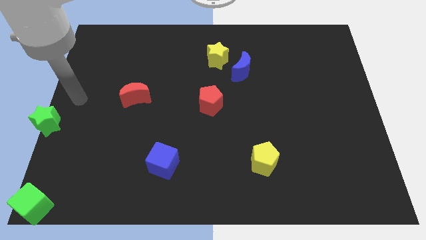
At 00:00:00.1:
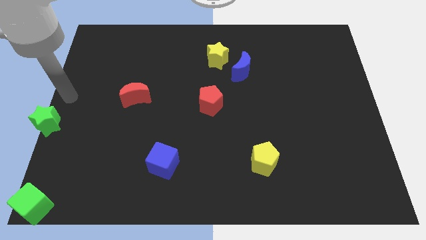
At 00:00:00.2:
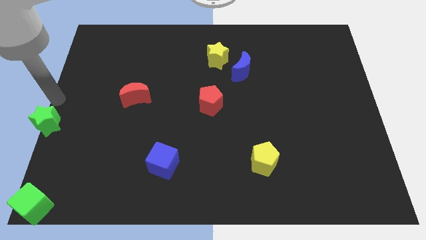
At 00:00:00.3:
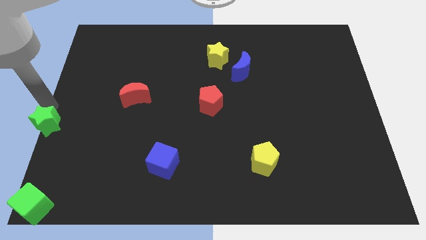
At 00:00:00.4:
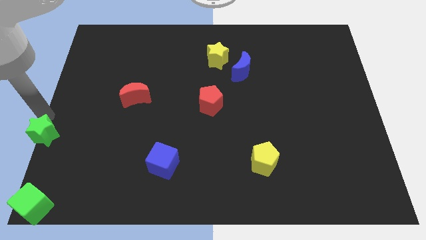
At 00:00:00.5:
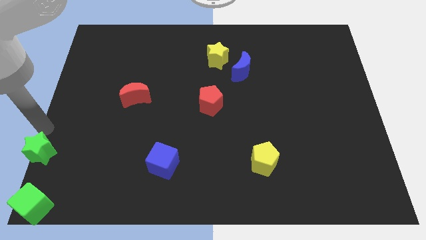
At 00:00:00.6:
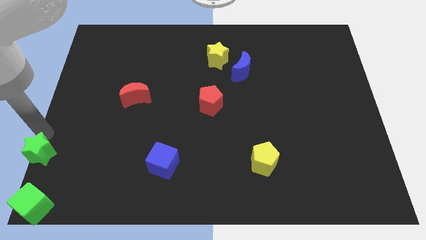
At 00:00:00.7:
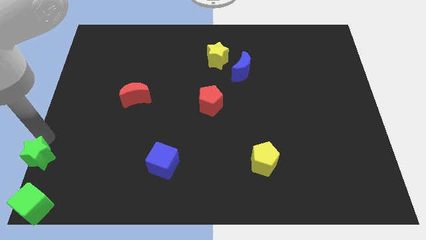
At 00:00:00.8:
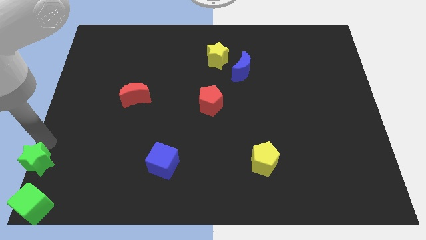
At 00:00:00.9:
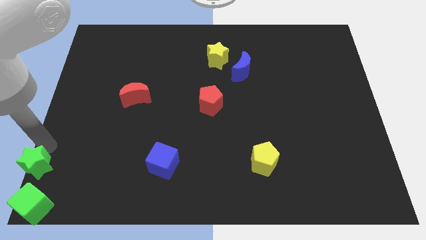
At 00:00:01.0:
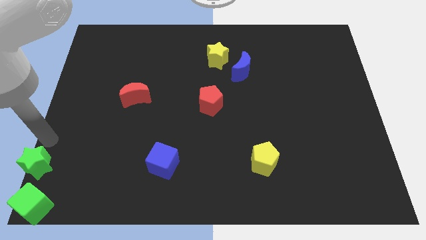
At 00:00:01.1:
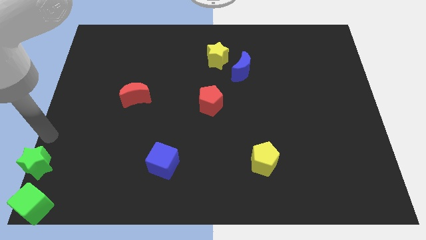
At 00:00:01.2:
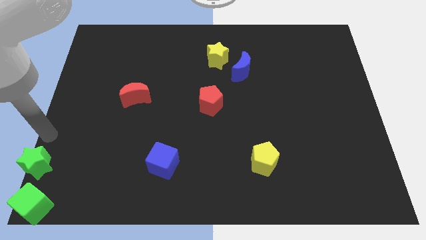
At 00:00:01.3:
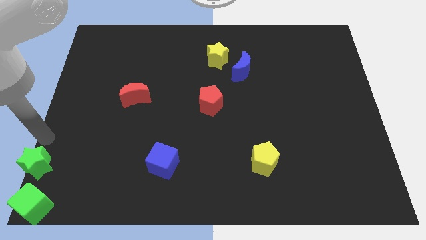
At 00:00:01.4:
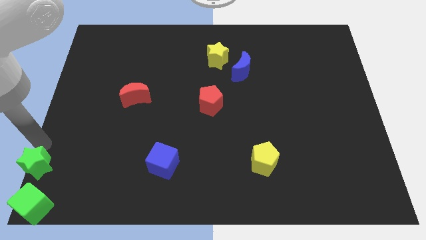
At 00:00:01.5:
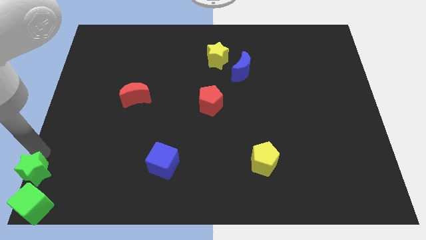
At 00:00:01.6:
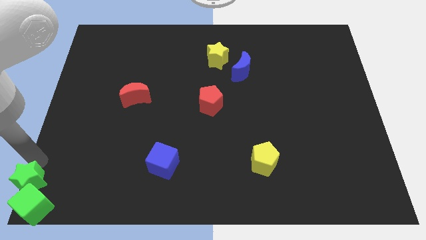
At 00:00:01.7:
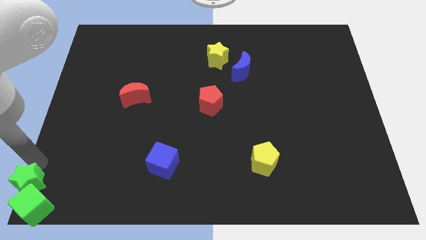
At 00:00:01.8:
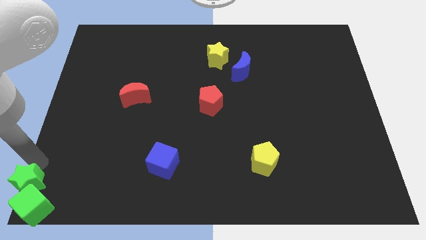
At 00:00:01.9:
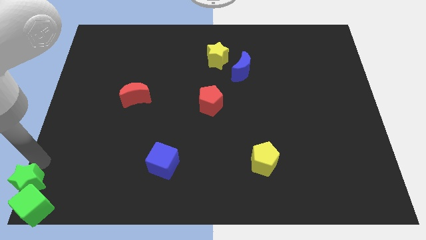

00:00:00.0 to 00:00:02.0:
move the green star towards the cube

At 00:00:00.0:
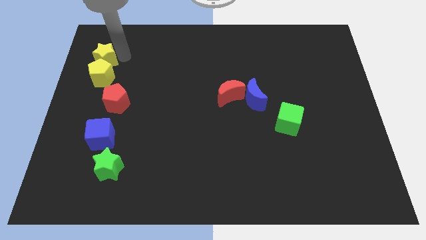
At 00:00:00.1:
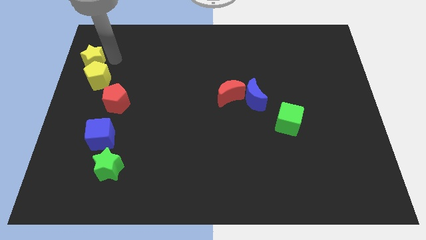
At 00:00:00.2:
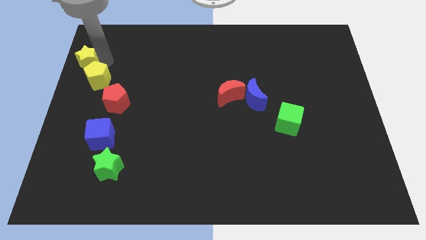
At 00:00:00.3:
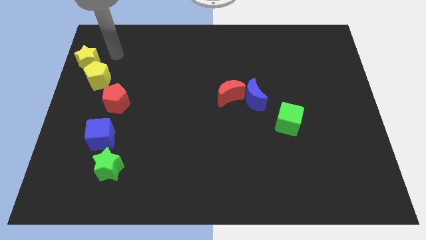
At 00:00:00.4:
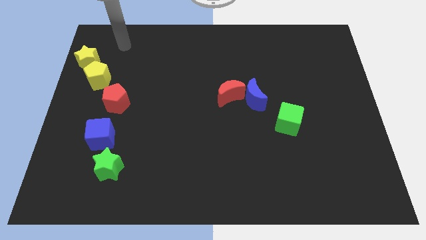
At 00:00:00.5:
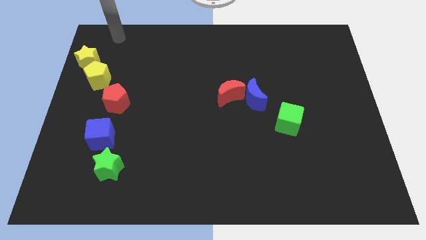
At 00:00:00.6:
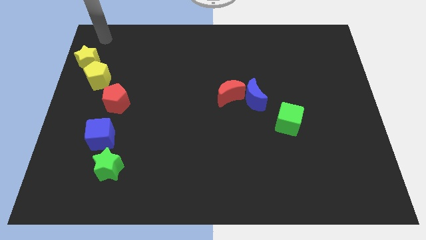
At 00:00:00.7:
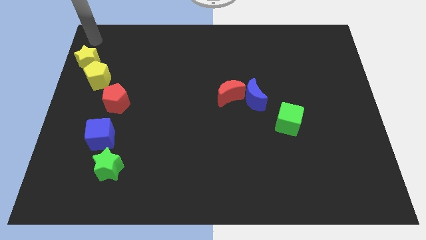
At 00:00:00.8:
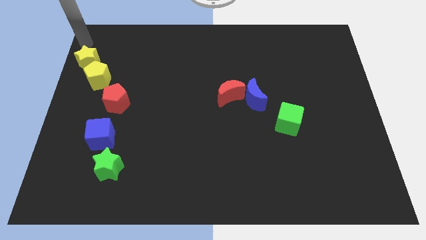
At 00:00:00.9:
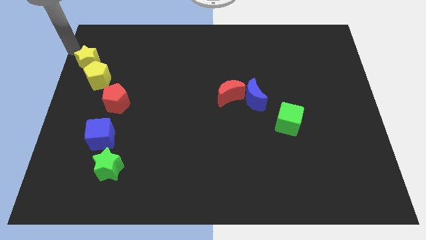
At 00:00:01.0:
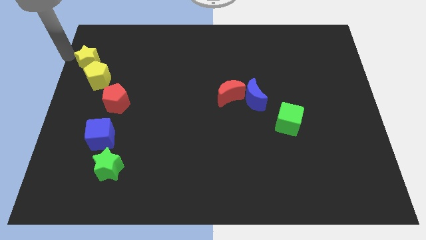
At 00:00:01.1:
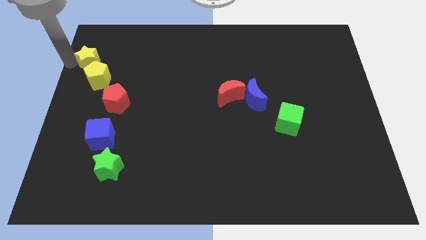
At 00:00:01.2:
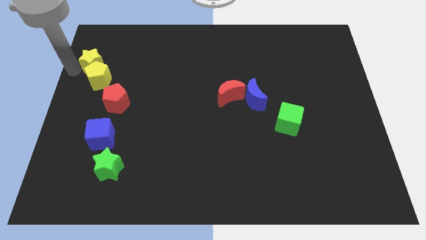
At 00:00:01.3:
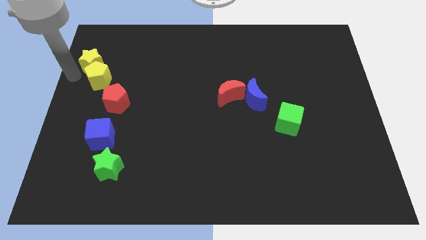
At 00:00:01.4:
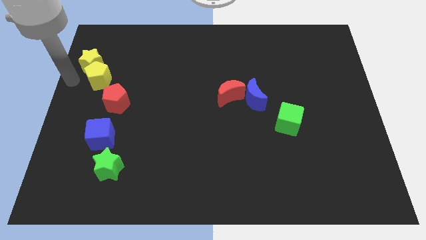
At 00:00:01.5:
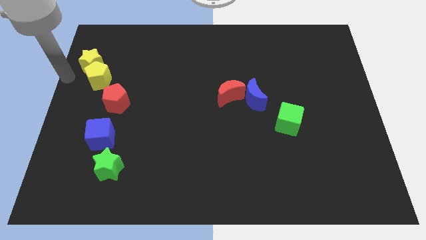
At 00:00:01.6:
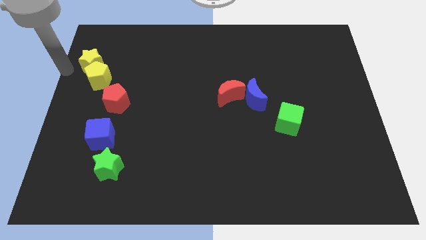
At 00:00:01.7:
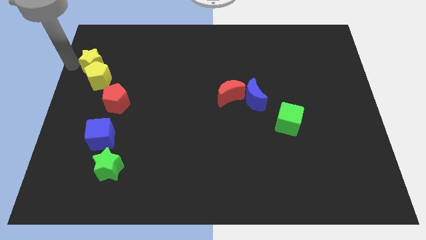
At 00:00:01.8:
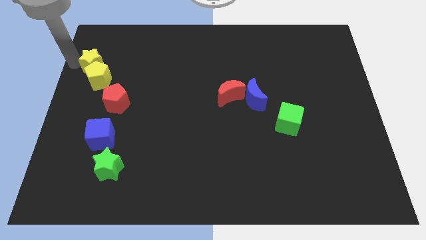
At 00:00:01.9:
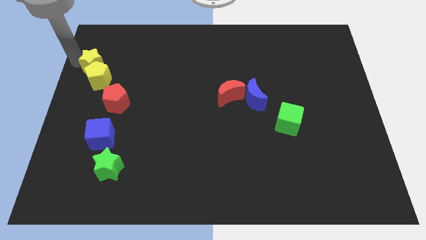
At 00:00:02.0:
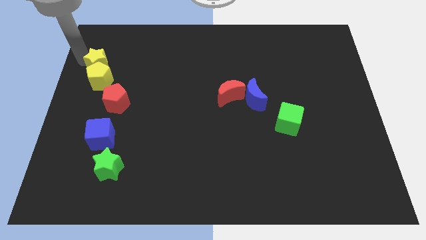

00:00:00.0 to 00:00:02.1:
move yellow blocks diagonally above the red pentagon

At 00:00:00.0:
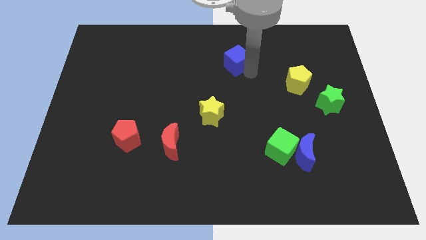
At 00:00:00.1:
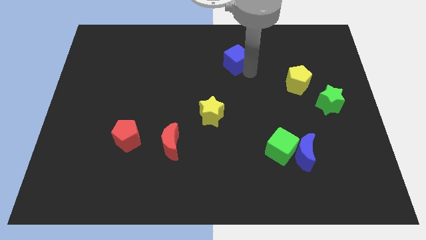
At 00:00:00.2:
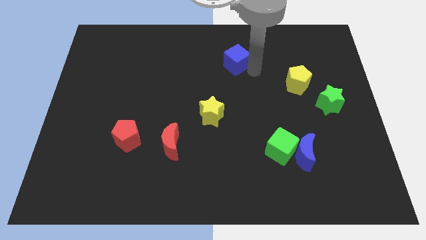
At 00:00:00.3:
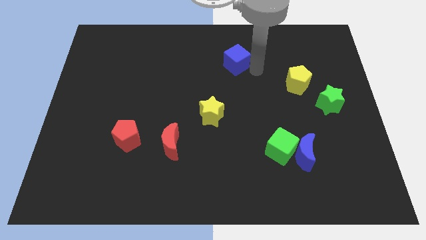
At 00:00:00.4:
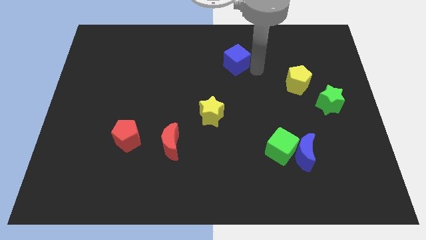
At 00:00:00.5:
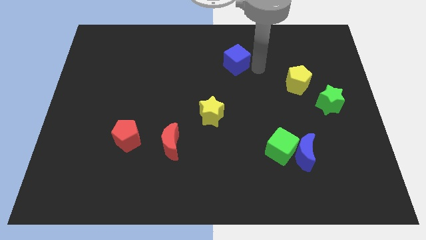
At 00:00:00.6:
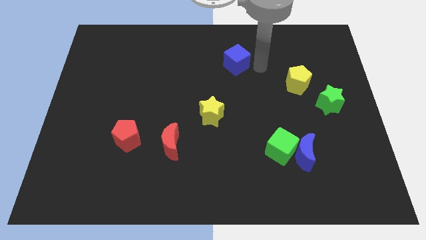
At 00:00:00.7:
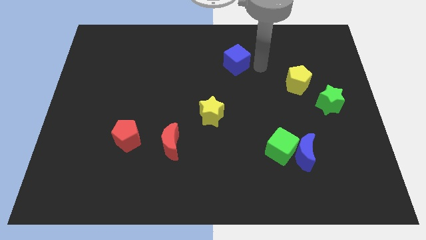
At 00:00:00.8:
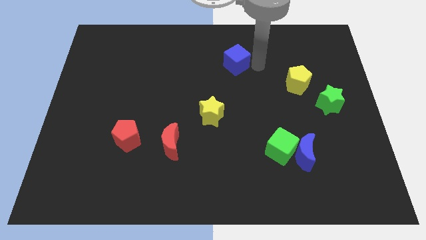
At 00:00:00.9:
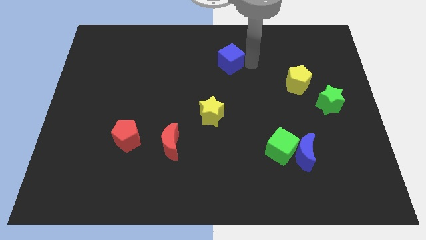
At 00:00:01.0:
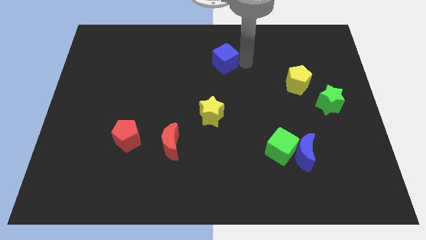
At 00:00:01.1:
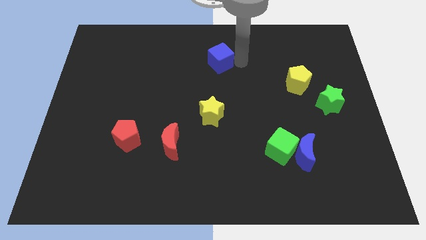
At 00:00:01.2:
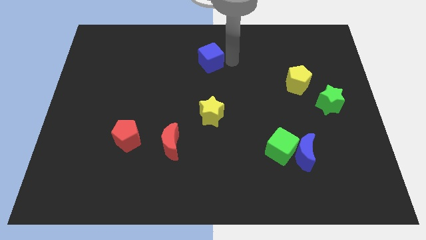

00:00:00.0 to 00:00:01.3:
place blue cube to the top of yellow star

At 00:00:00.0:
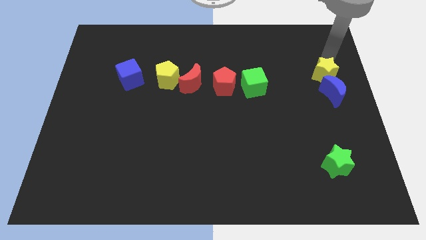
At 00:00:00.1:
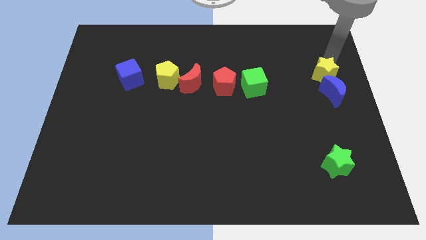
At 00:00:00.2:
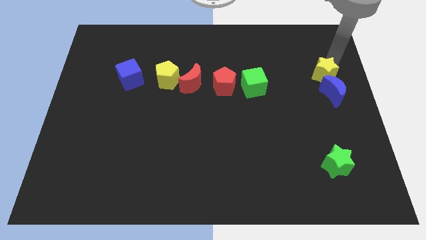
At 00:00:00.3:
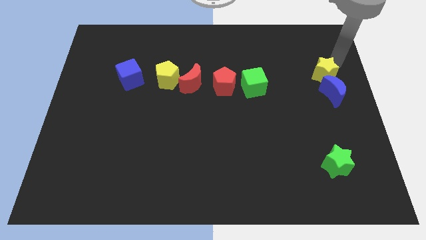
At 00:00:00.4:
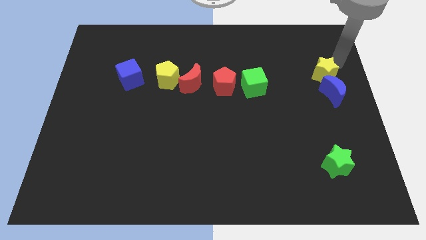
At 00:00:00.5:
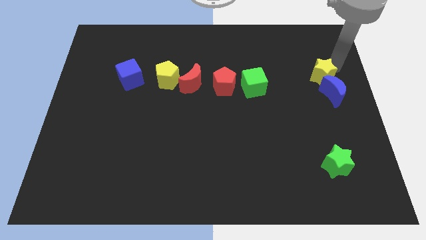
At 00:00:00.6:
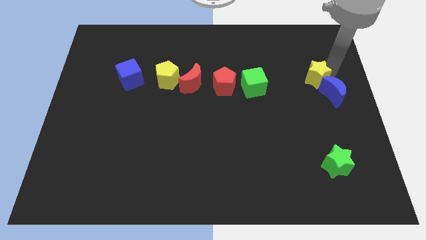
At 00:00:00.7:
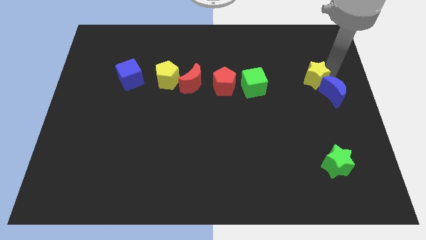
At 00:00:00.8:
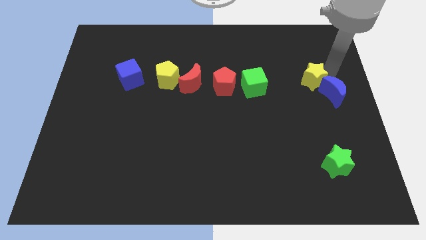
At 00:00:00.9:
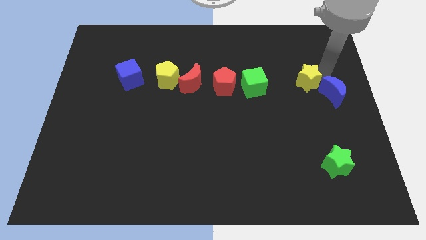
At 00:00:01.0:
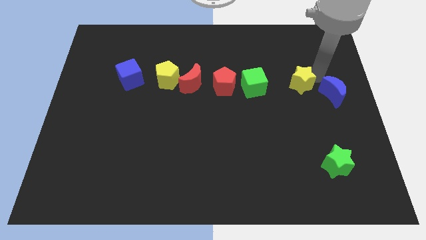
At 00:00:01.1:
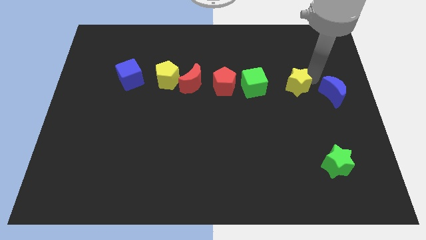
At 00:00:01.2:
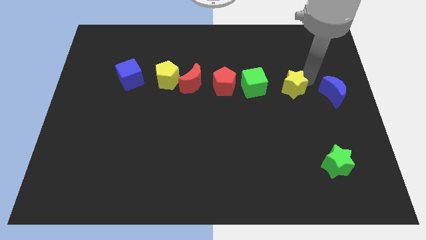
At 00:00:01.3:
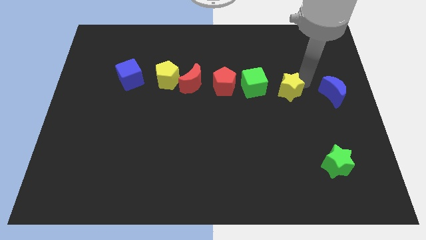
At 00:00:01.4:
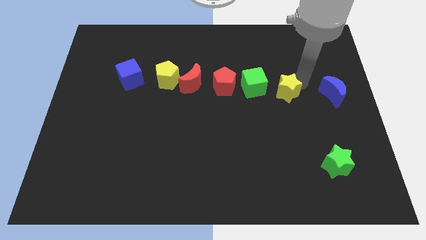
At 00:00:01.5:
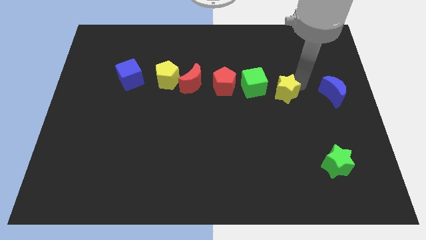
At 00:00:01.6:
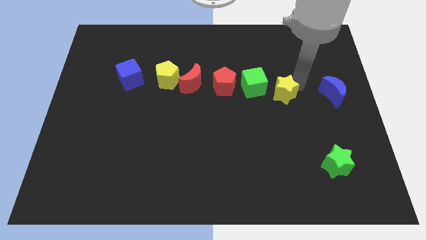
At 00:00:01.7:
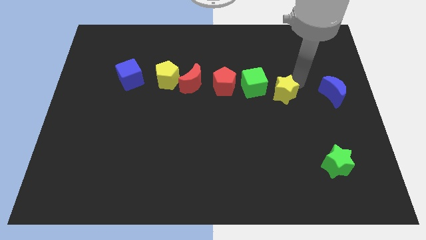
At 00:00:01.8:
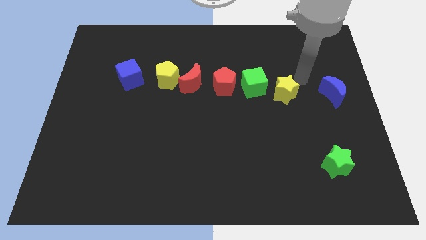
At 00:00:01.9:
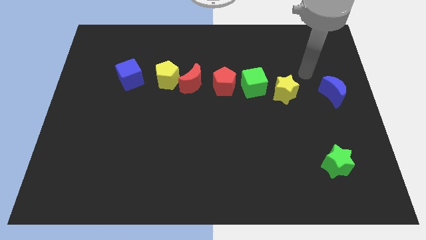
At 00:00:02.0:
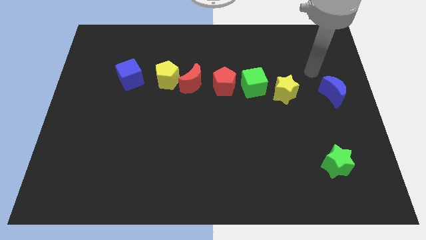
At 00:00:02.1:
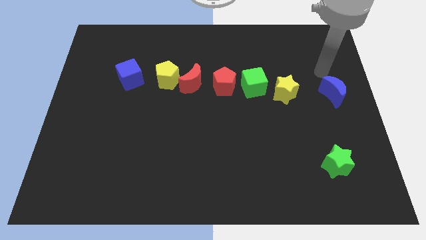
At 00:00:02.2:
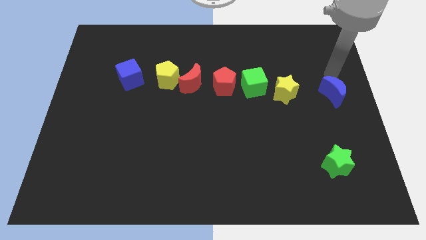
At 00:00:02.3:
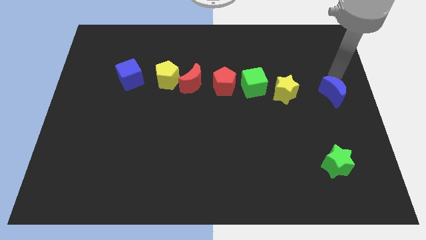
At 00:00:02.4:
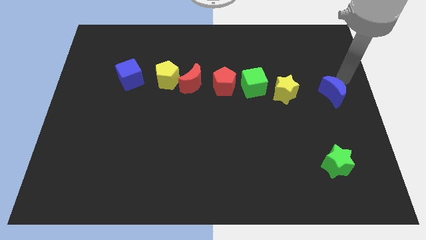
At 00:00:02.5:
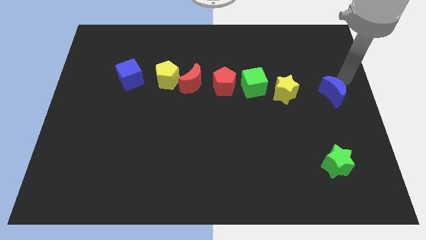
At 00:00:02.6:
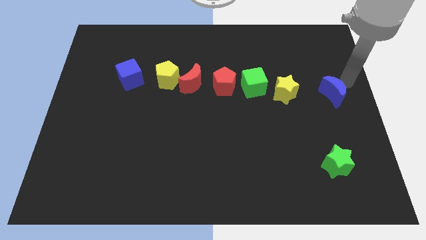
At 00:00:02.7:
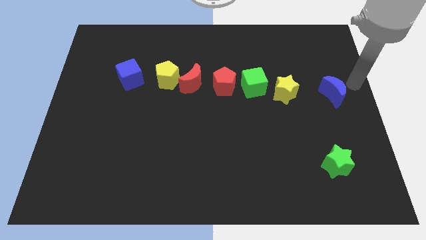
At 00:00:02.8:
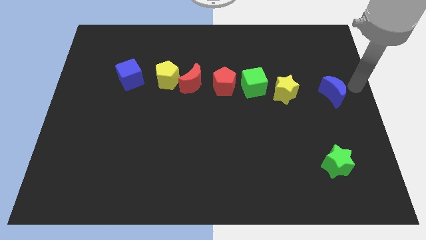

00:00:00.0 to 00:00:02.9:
place yellow star to the right of the green cube

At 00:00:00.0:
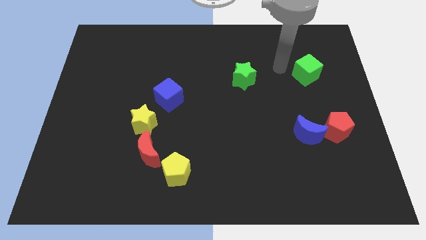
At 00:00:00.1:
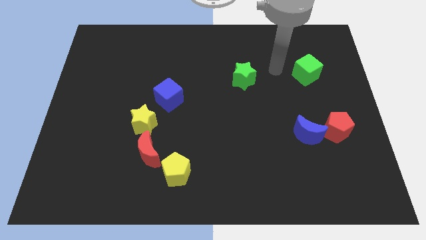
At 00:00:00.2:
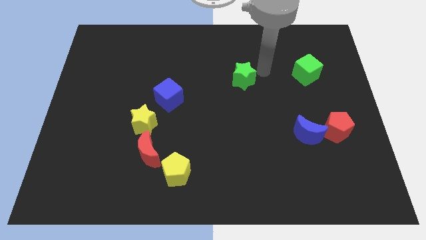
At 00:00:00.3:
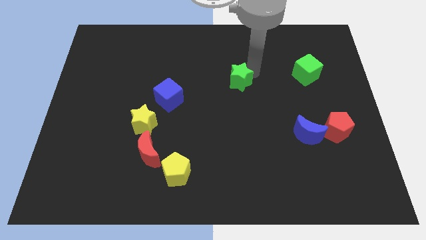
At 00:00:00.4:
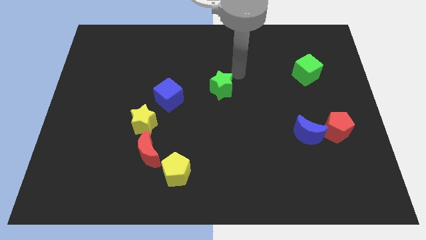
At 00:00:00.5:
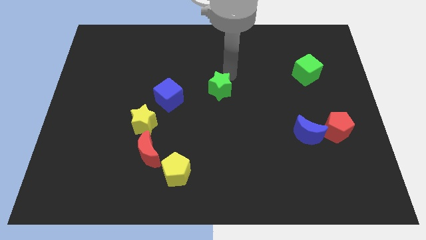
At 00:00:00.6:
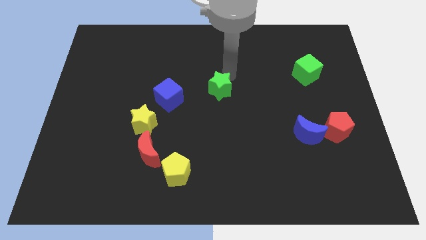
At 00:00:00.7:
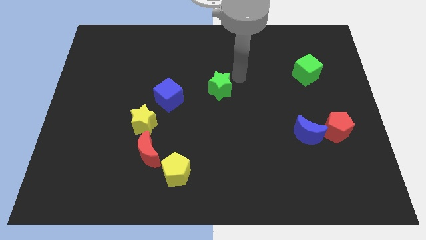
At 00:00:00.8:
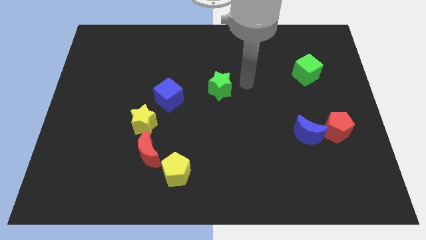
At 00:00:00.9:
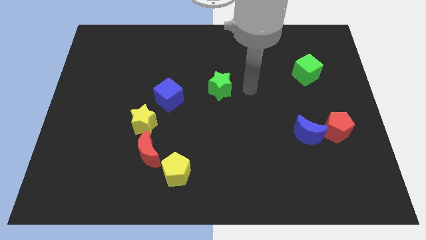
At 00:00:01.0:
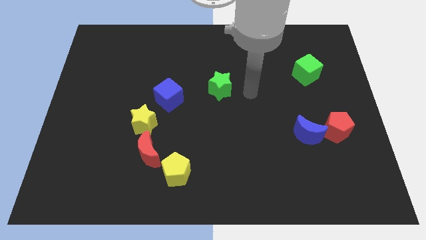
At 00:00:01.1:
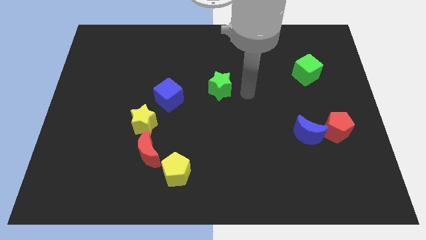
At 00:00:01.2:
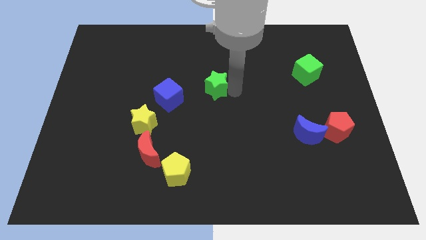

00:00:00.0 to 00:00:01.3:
move the green star towards the blue cube
